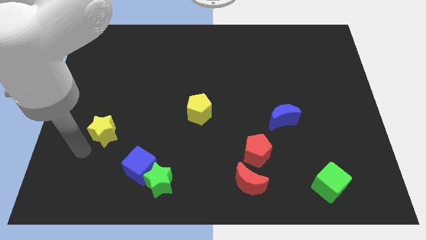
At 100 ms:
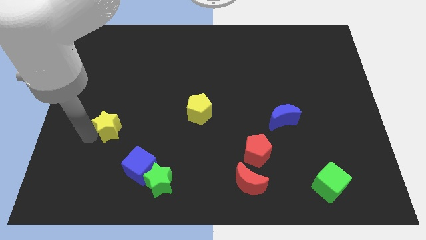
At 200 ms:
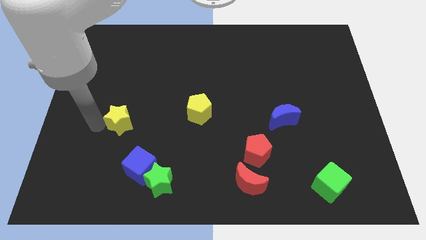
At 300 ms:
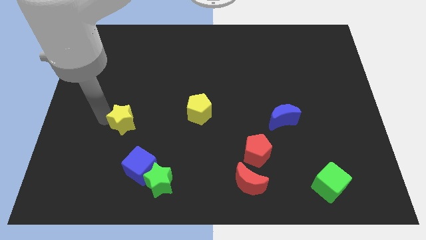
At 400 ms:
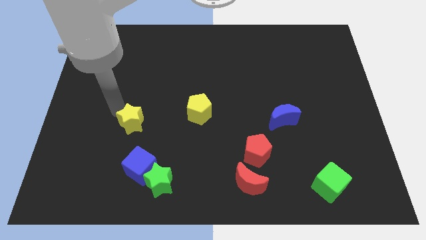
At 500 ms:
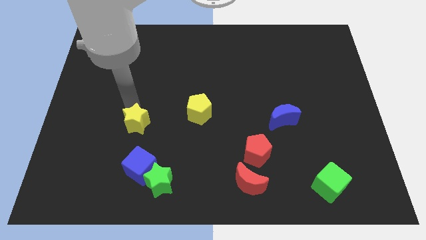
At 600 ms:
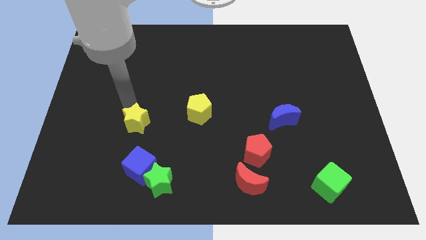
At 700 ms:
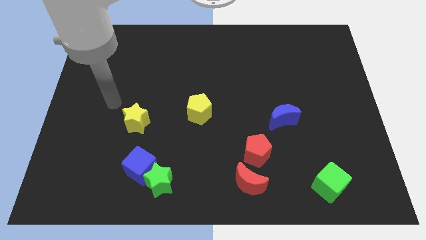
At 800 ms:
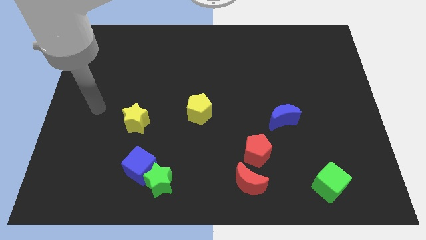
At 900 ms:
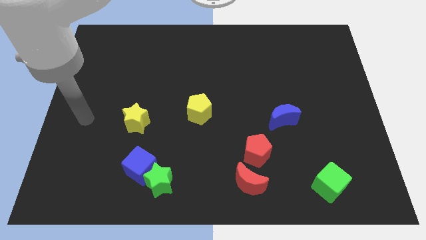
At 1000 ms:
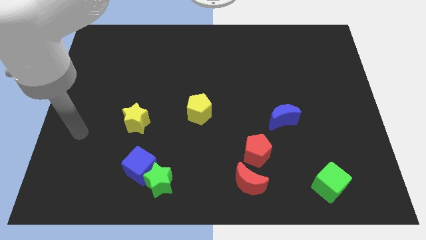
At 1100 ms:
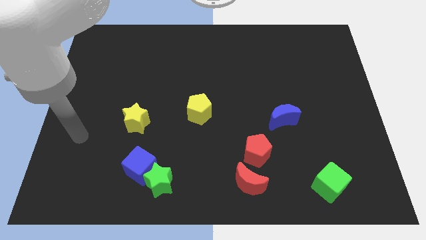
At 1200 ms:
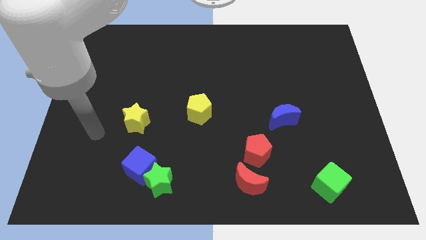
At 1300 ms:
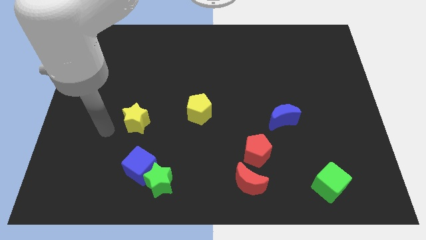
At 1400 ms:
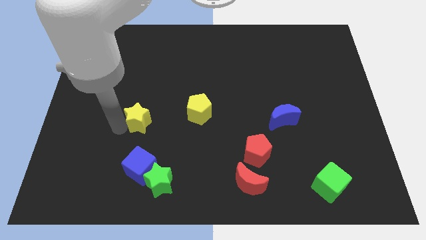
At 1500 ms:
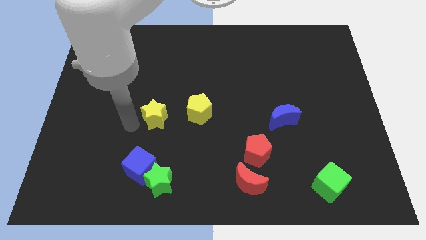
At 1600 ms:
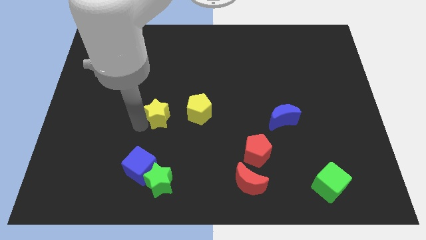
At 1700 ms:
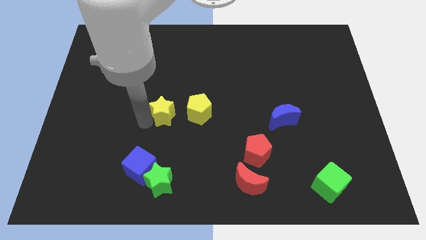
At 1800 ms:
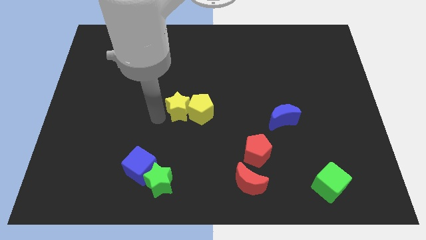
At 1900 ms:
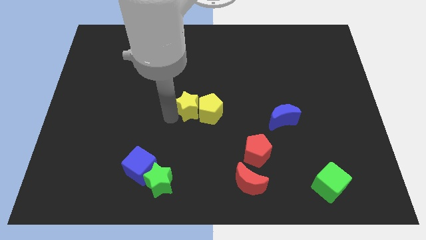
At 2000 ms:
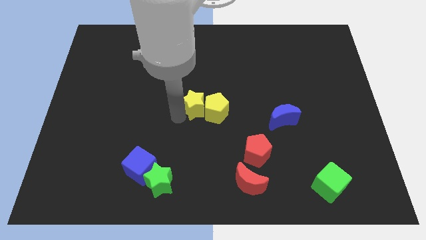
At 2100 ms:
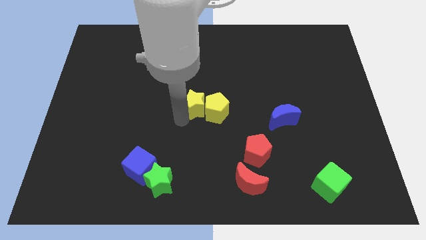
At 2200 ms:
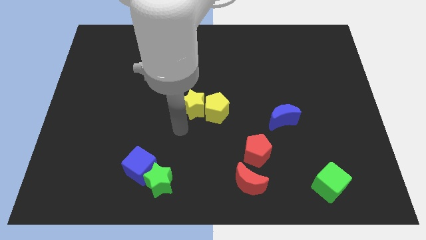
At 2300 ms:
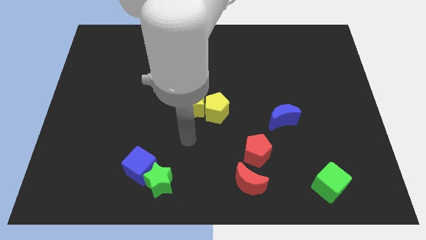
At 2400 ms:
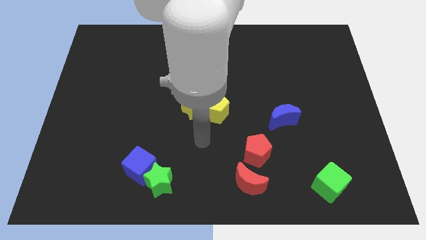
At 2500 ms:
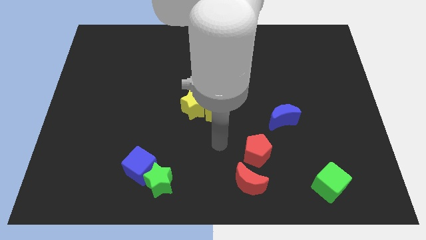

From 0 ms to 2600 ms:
place yellow star beside yellow pentagon

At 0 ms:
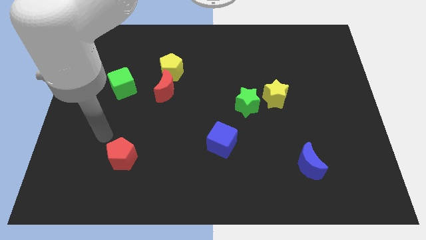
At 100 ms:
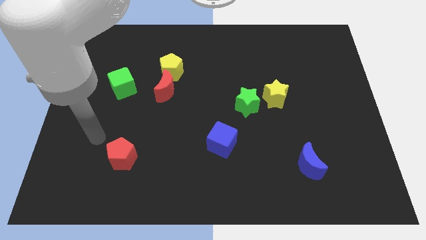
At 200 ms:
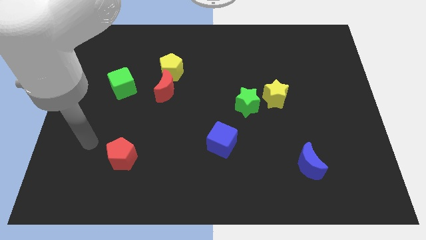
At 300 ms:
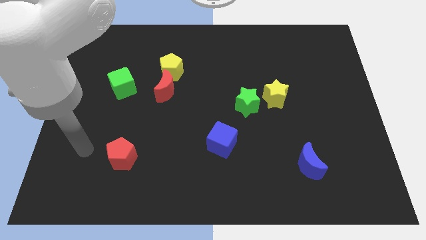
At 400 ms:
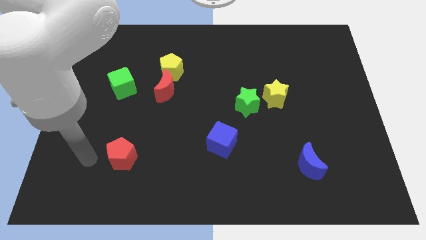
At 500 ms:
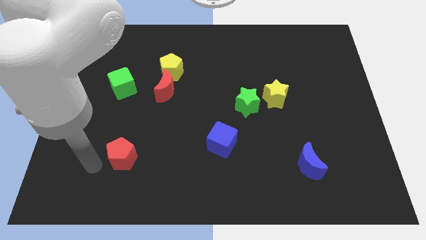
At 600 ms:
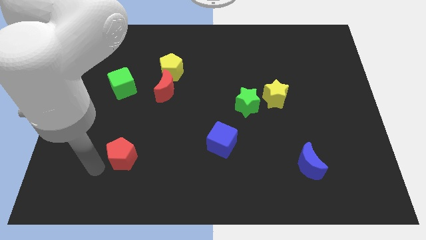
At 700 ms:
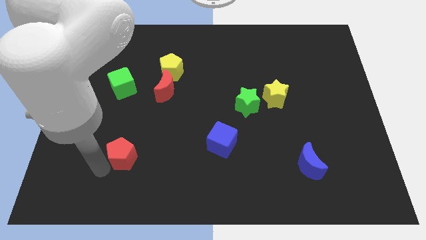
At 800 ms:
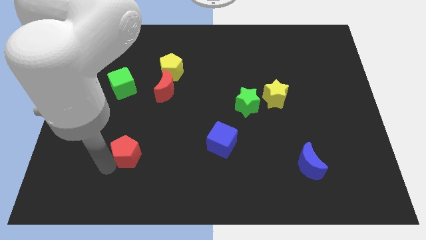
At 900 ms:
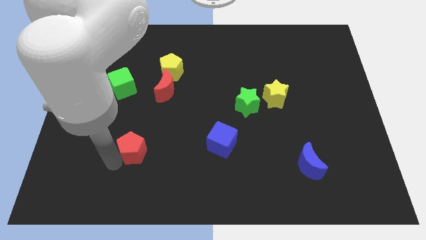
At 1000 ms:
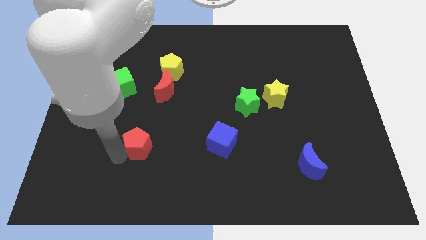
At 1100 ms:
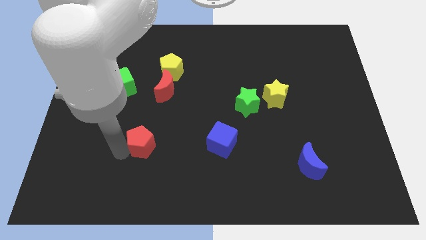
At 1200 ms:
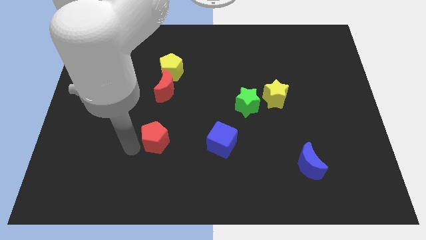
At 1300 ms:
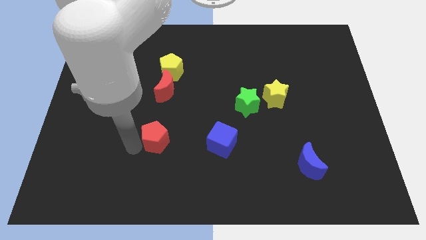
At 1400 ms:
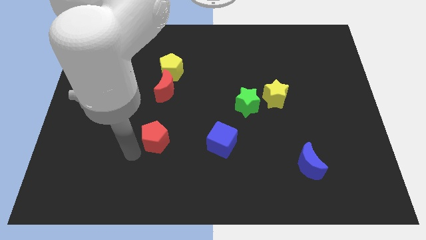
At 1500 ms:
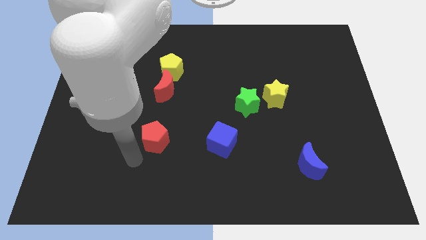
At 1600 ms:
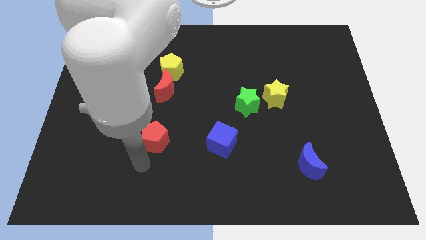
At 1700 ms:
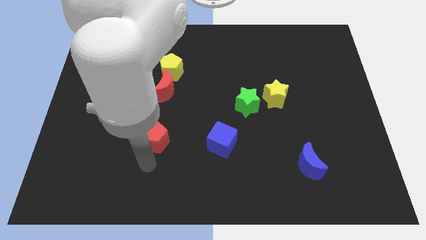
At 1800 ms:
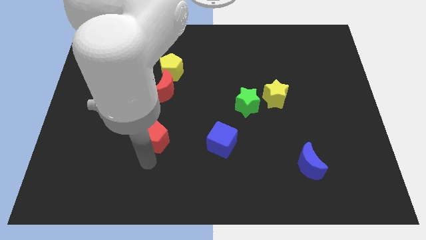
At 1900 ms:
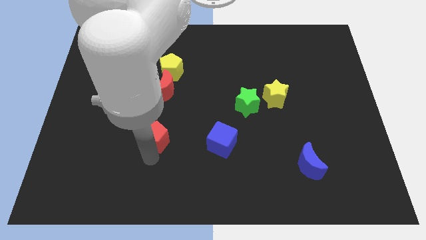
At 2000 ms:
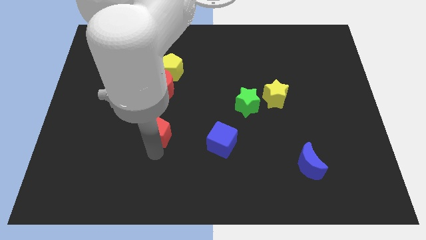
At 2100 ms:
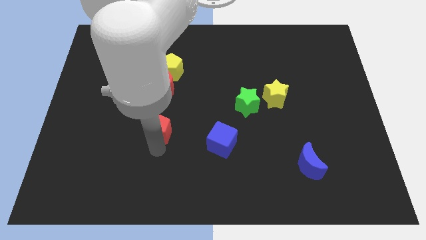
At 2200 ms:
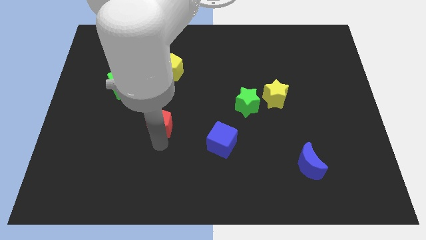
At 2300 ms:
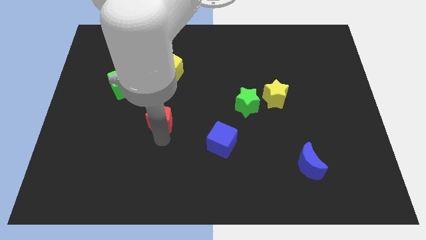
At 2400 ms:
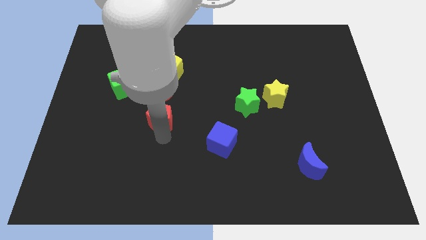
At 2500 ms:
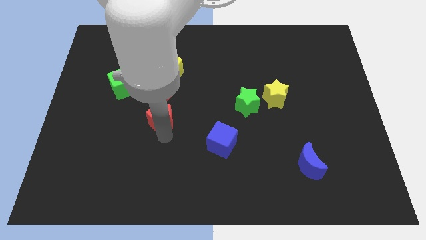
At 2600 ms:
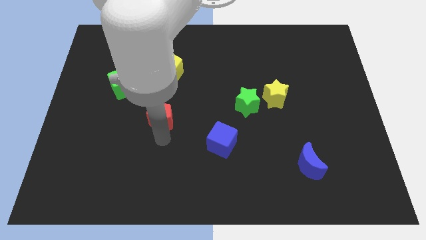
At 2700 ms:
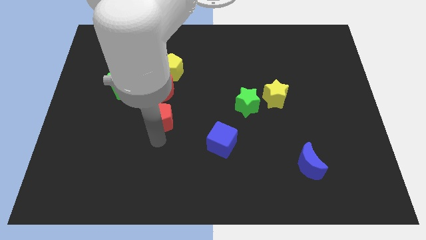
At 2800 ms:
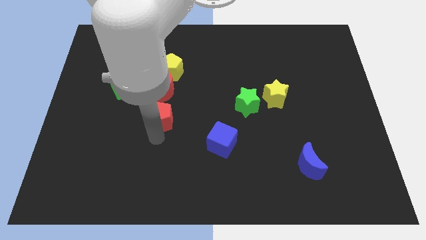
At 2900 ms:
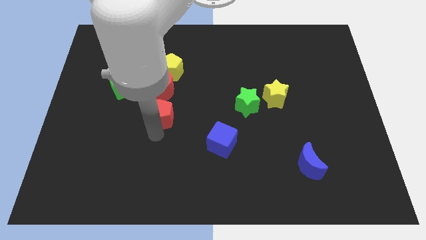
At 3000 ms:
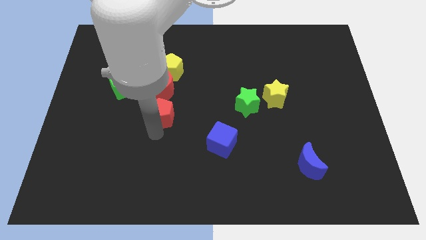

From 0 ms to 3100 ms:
move red pentagon close to the red moon

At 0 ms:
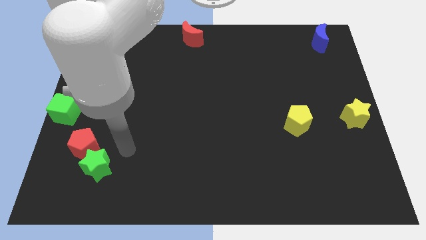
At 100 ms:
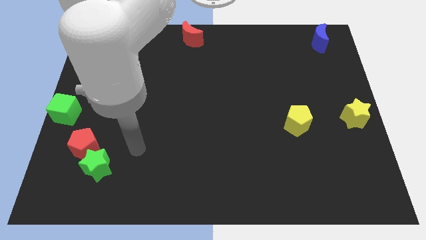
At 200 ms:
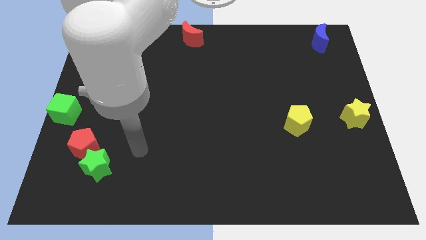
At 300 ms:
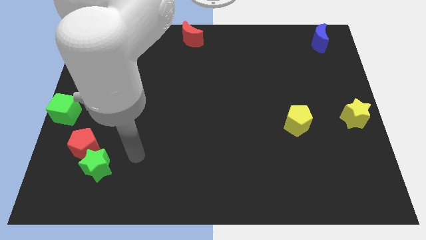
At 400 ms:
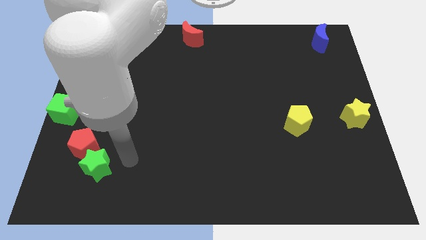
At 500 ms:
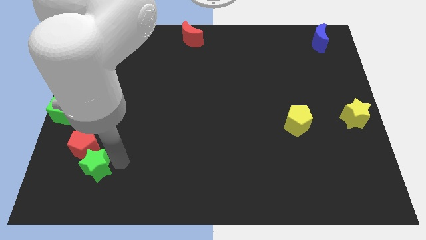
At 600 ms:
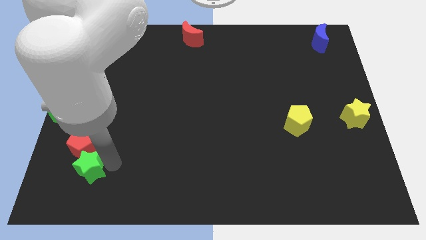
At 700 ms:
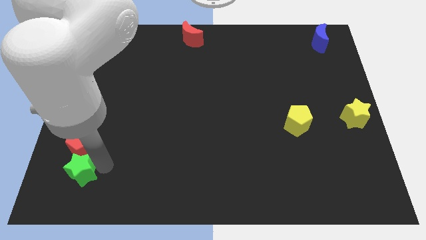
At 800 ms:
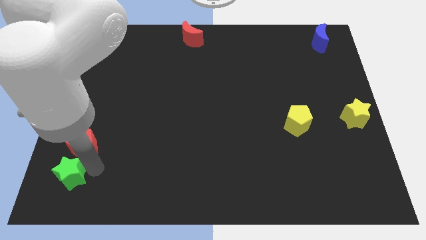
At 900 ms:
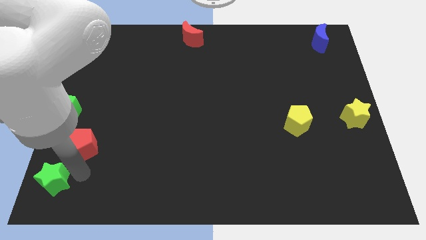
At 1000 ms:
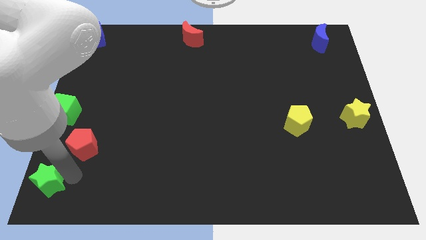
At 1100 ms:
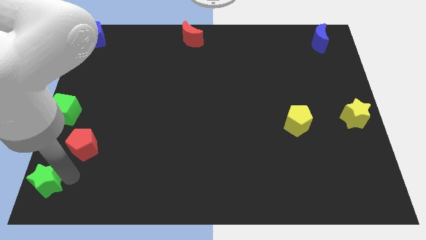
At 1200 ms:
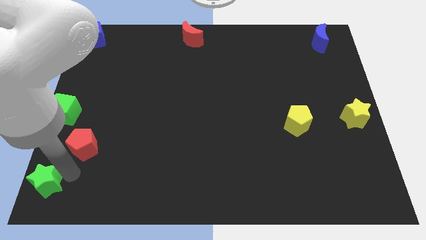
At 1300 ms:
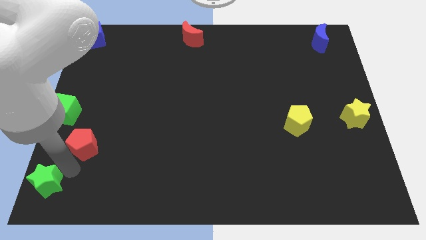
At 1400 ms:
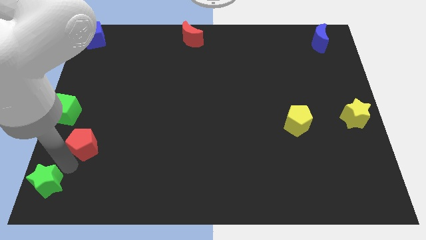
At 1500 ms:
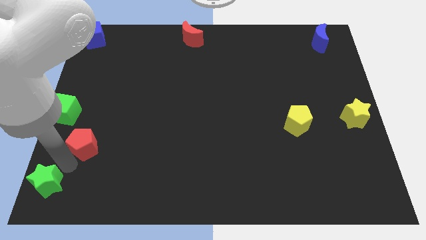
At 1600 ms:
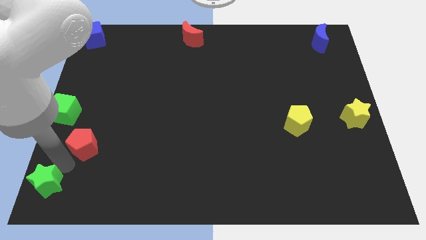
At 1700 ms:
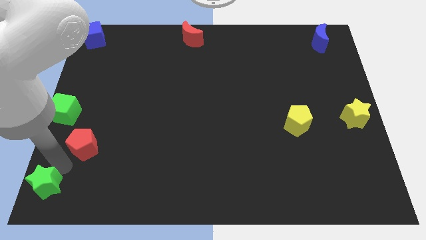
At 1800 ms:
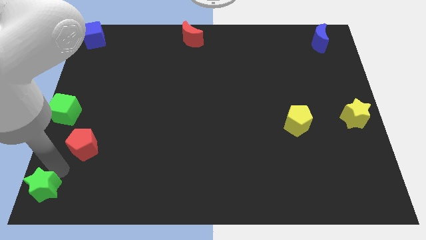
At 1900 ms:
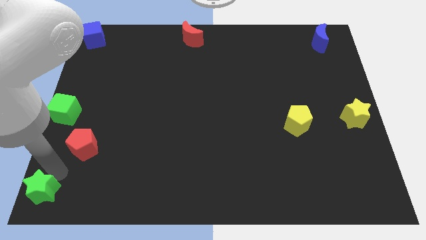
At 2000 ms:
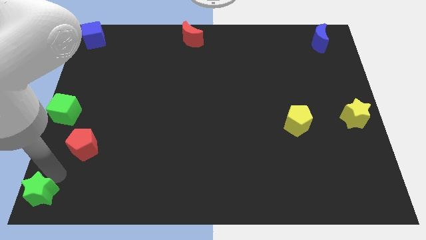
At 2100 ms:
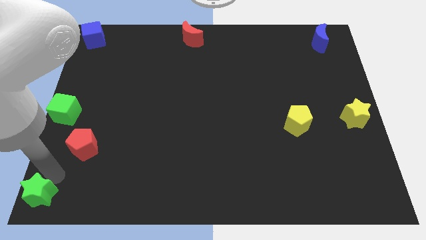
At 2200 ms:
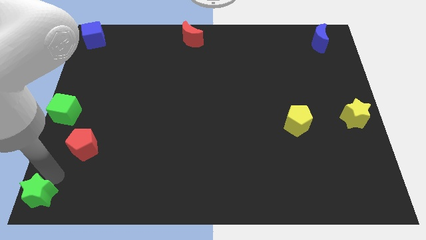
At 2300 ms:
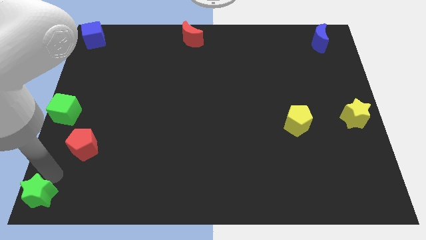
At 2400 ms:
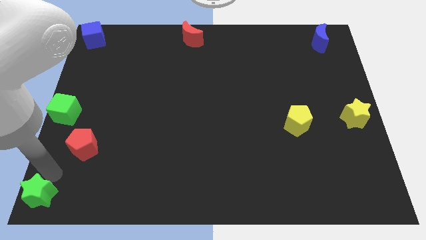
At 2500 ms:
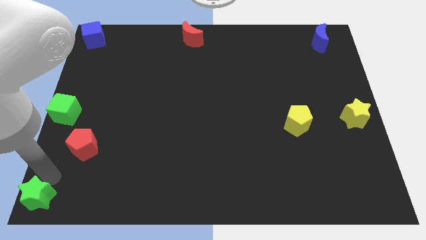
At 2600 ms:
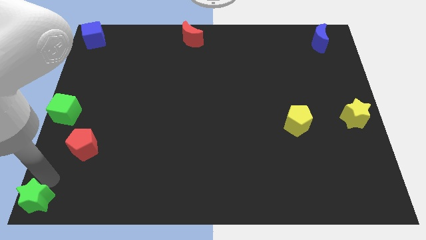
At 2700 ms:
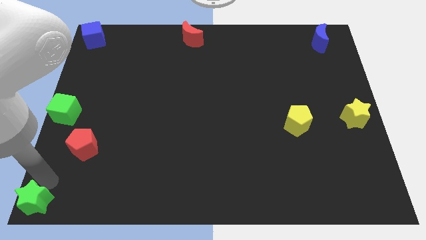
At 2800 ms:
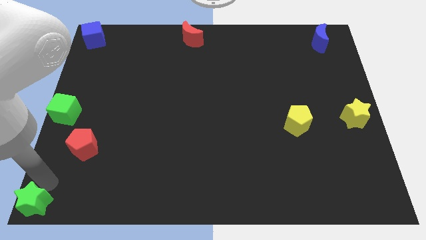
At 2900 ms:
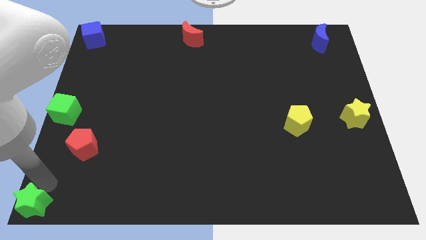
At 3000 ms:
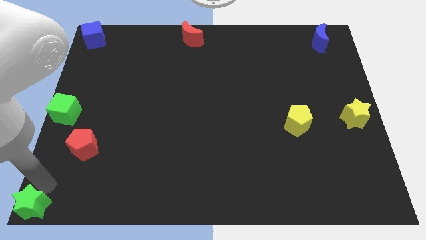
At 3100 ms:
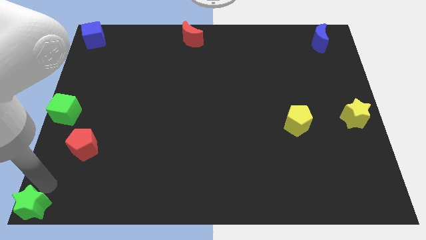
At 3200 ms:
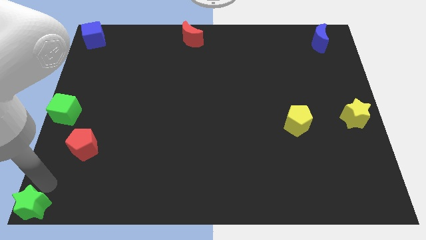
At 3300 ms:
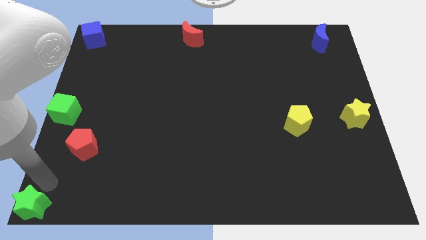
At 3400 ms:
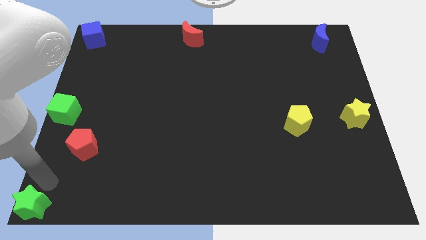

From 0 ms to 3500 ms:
move the green star to the bottom left of the board
